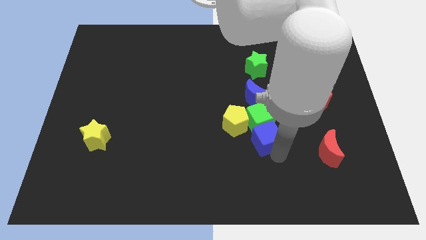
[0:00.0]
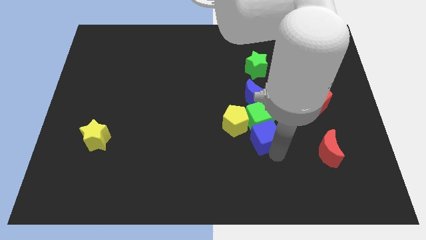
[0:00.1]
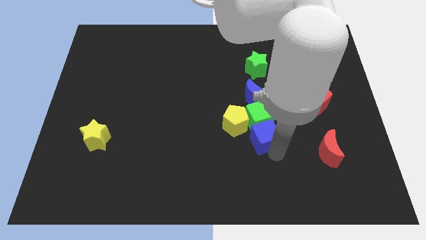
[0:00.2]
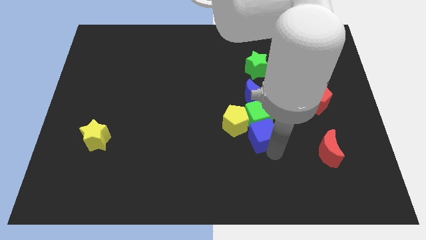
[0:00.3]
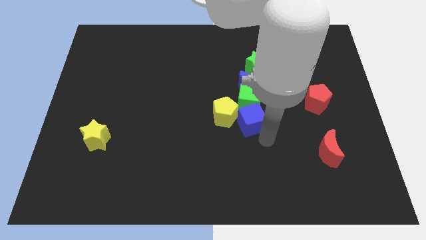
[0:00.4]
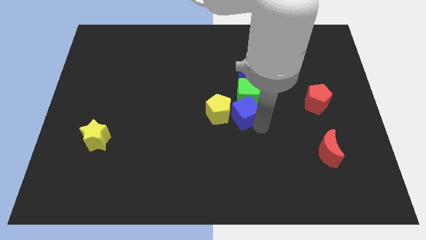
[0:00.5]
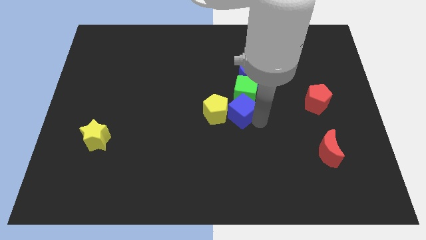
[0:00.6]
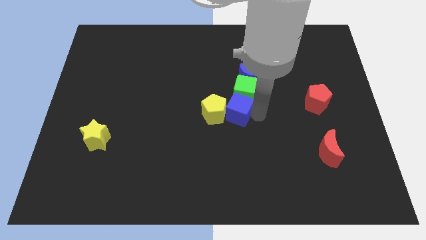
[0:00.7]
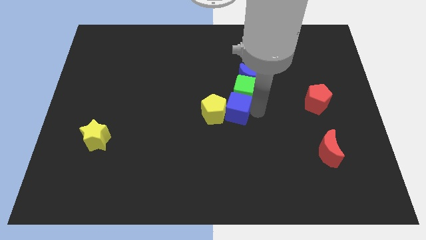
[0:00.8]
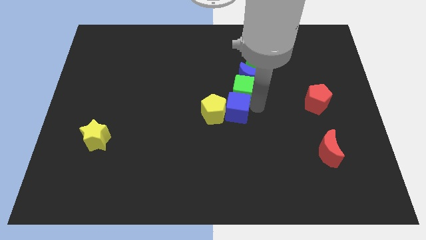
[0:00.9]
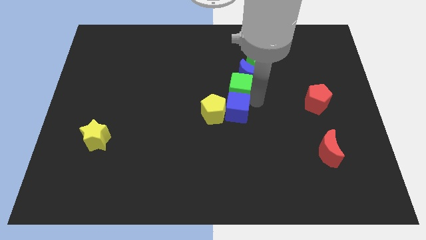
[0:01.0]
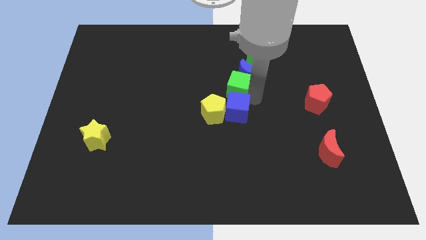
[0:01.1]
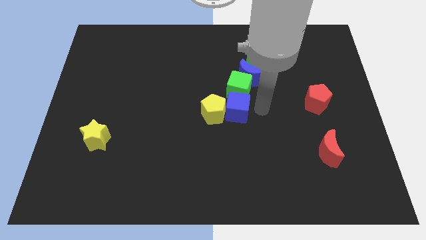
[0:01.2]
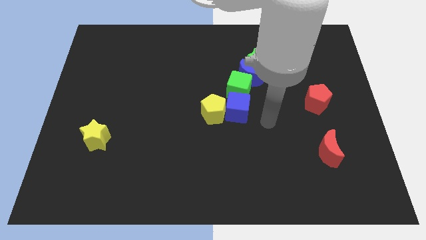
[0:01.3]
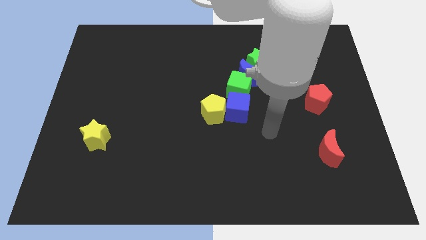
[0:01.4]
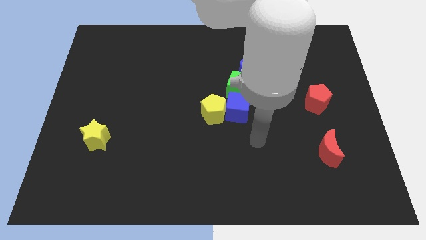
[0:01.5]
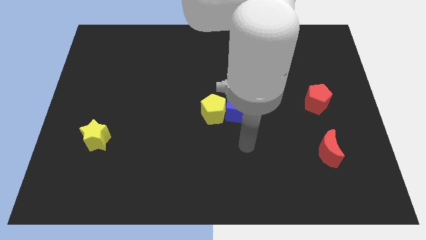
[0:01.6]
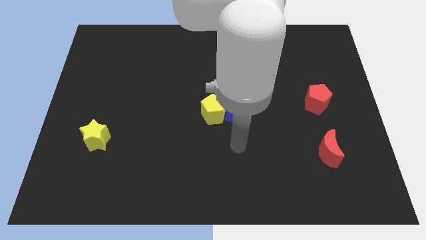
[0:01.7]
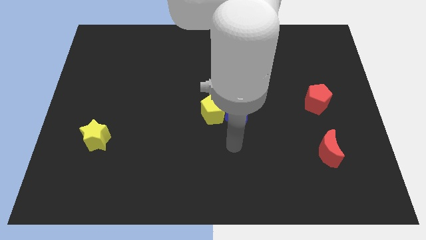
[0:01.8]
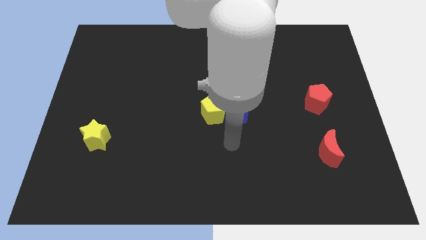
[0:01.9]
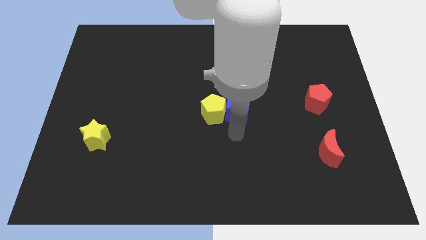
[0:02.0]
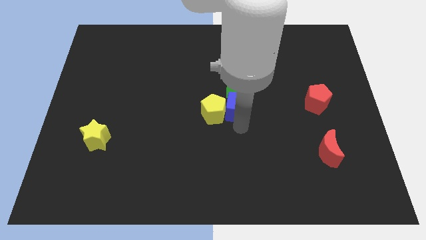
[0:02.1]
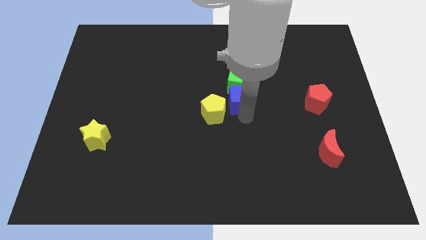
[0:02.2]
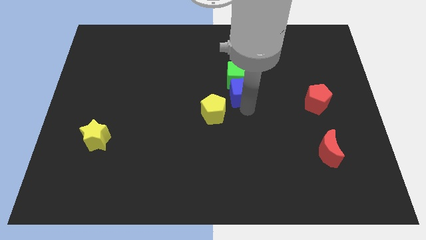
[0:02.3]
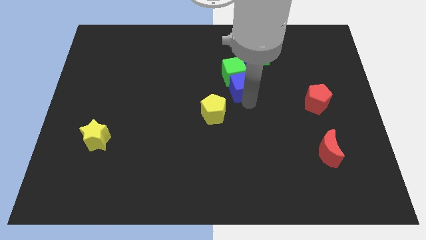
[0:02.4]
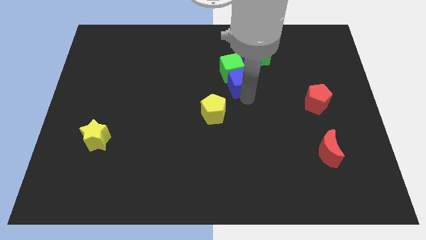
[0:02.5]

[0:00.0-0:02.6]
move the yellow pentagon with the blue cube

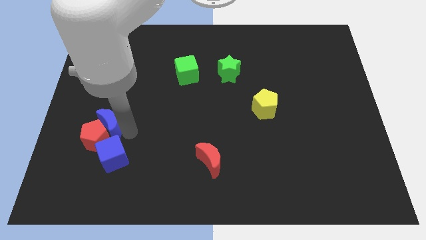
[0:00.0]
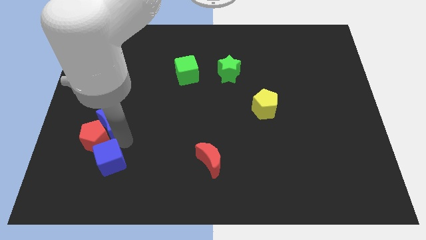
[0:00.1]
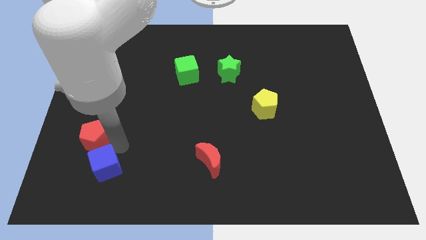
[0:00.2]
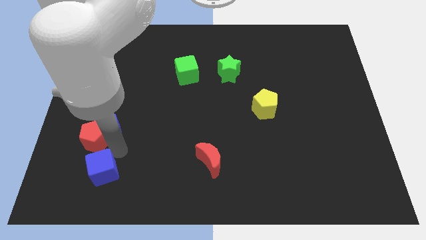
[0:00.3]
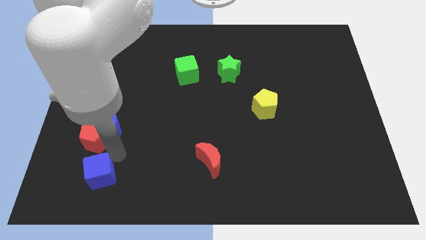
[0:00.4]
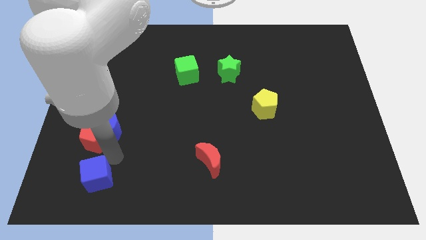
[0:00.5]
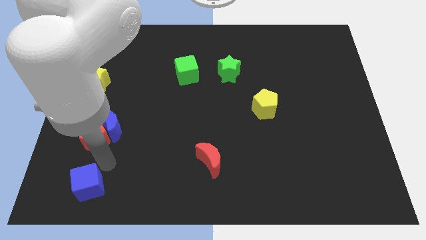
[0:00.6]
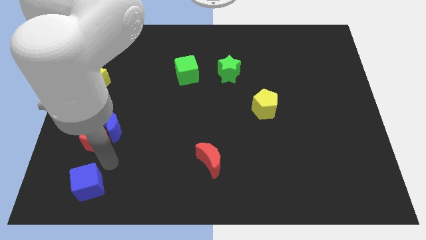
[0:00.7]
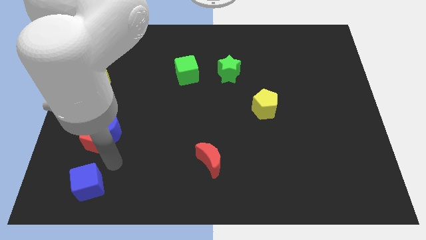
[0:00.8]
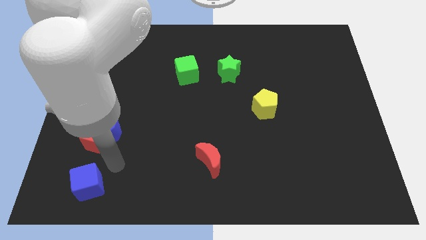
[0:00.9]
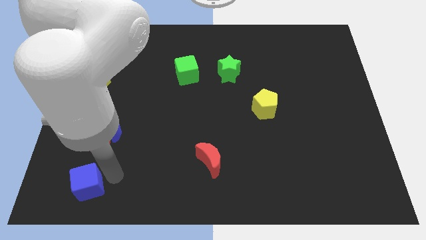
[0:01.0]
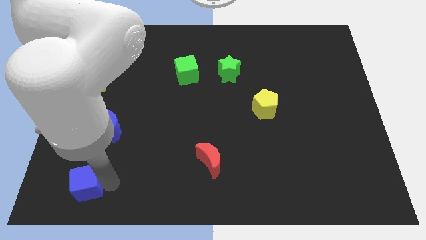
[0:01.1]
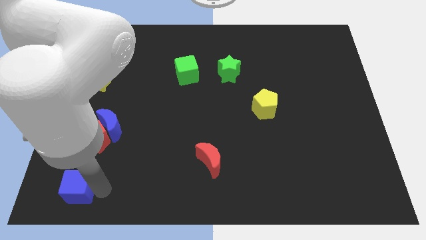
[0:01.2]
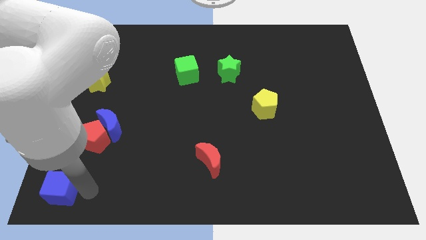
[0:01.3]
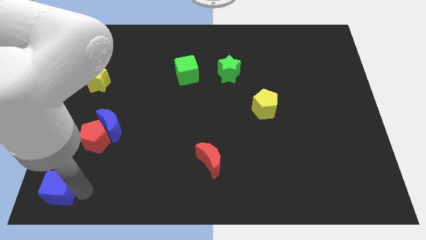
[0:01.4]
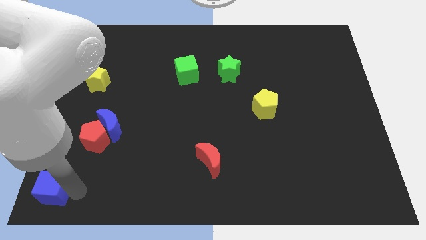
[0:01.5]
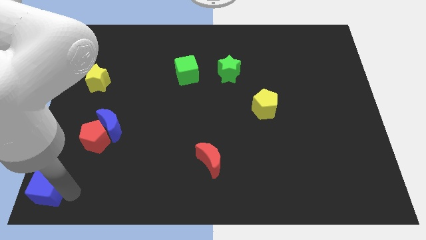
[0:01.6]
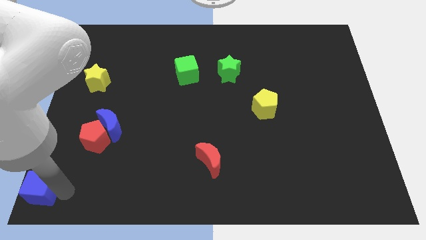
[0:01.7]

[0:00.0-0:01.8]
move the blue cube to the bottom left of the board

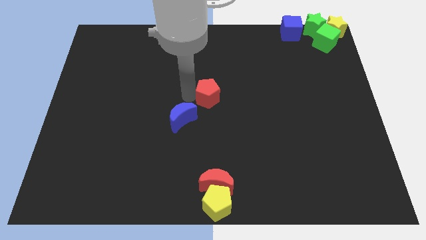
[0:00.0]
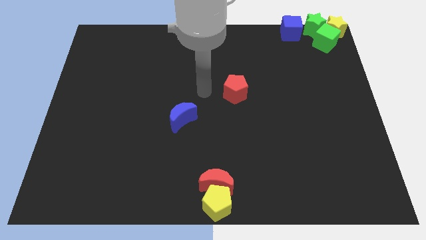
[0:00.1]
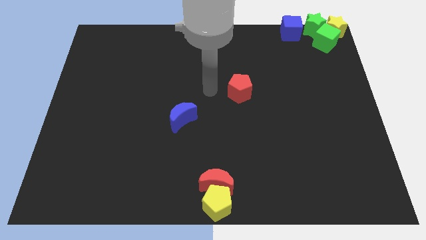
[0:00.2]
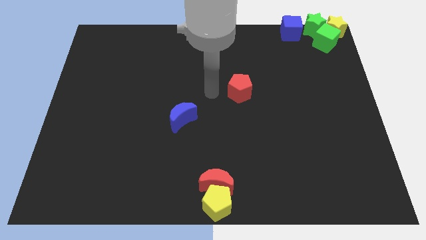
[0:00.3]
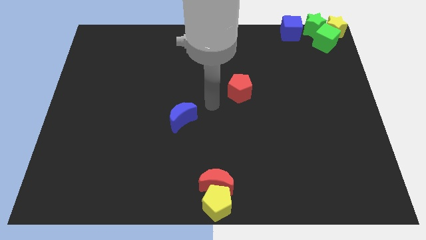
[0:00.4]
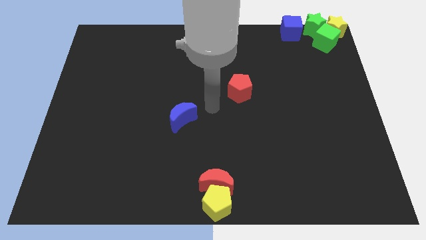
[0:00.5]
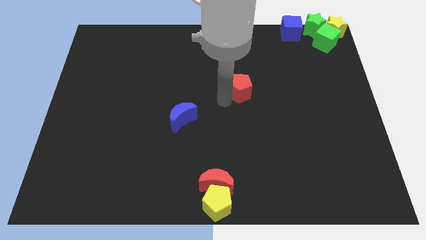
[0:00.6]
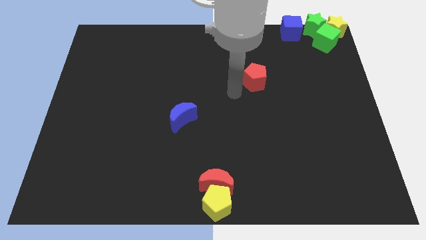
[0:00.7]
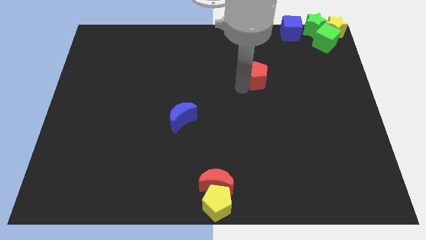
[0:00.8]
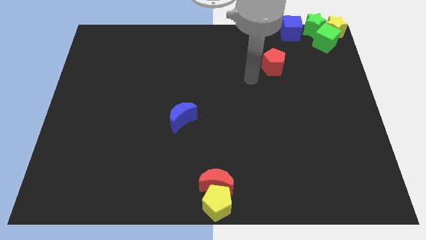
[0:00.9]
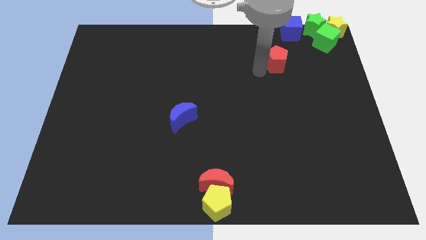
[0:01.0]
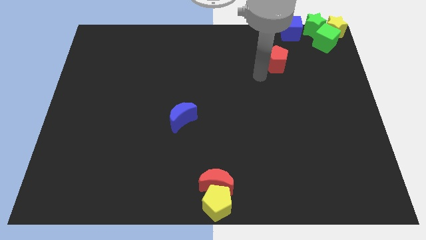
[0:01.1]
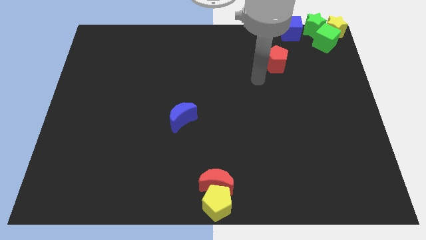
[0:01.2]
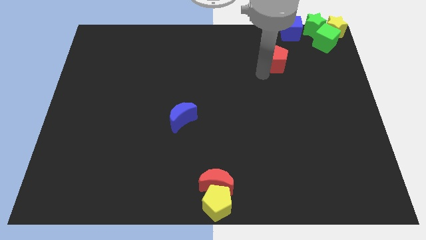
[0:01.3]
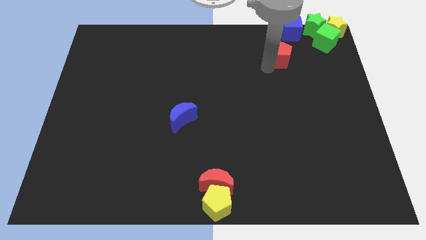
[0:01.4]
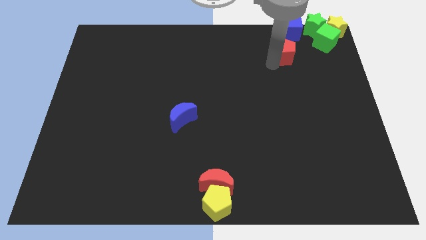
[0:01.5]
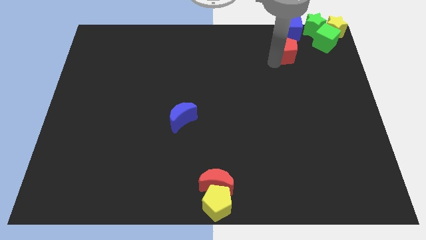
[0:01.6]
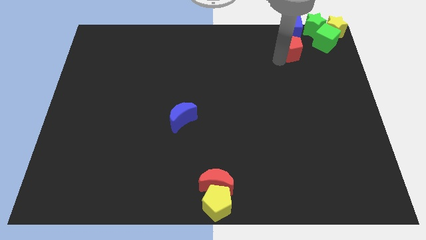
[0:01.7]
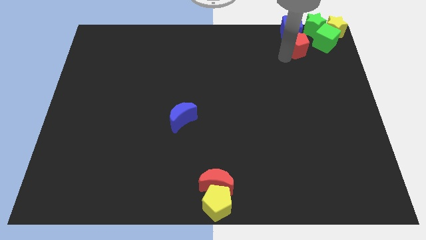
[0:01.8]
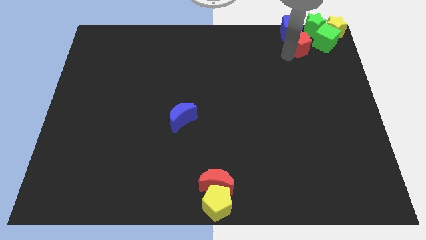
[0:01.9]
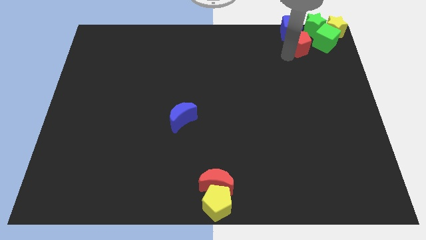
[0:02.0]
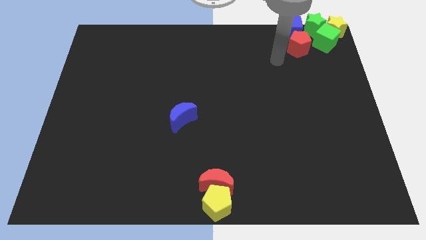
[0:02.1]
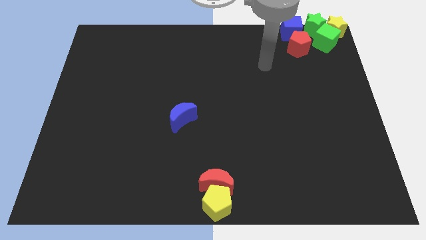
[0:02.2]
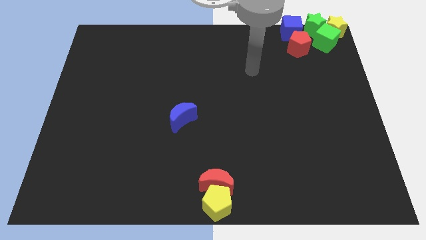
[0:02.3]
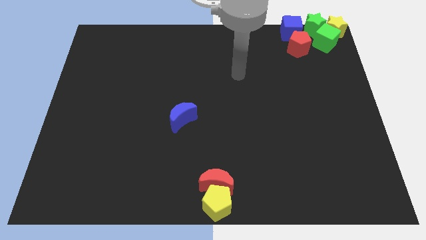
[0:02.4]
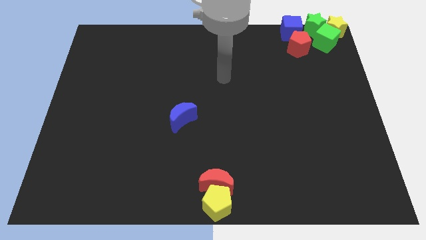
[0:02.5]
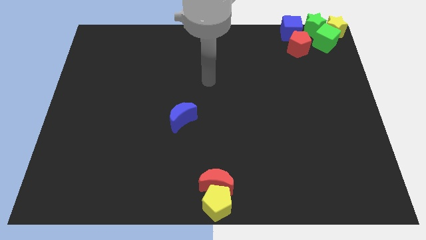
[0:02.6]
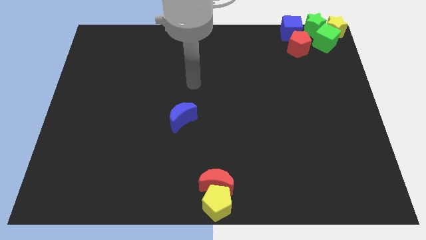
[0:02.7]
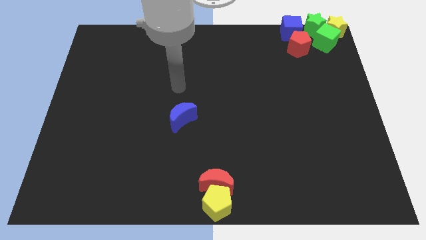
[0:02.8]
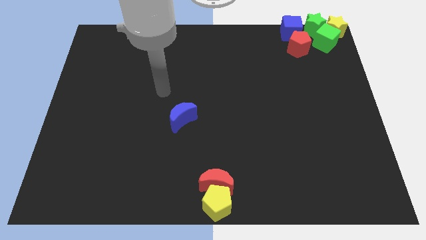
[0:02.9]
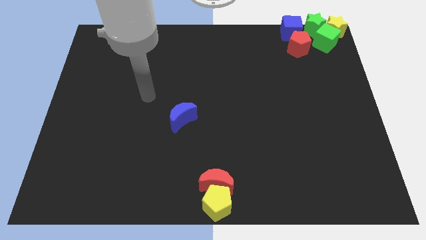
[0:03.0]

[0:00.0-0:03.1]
move the red pentagon near to the group of objects

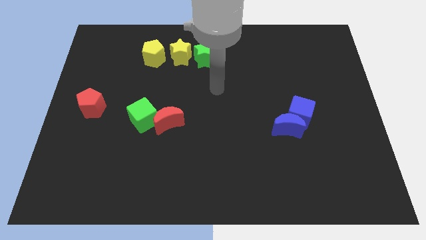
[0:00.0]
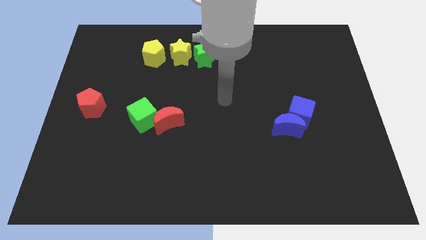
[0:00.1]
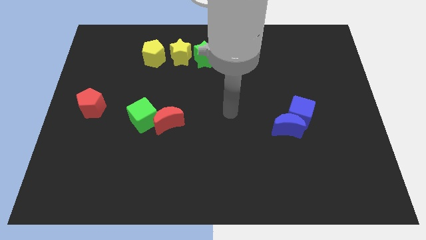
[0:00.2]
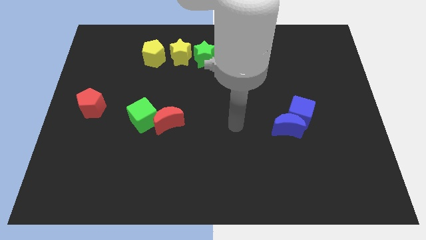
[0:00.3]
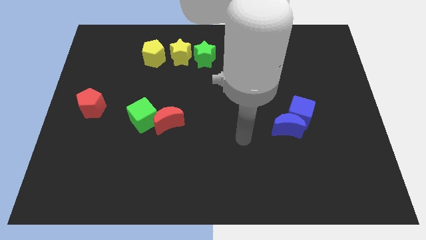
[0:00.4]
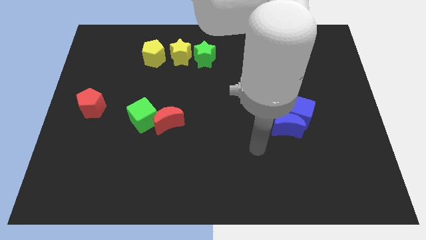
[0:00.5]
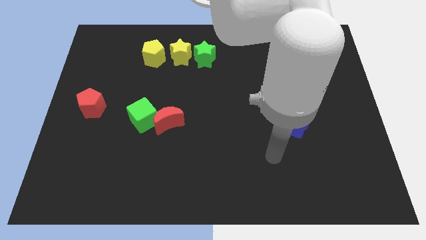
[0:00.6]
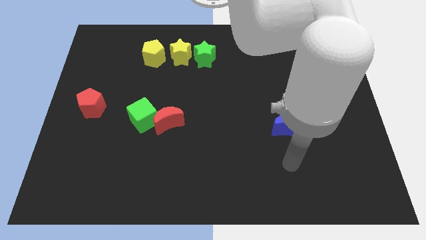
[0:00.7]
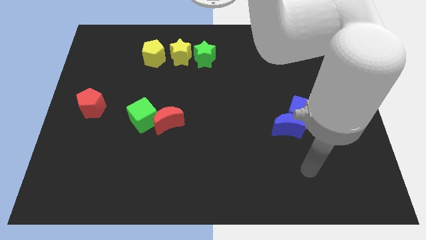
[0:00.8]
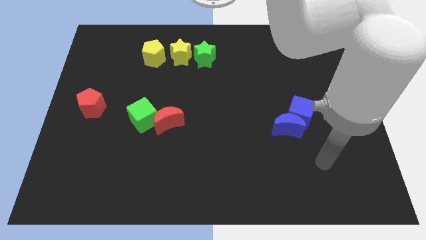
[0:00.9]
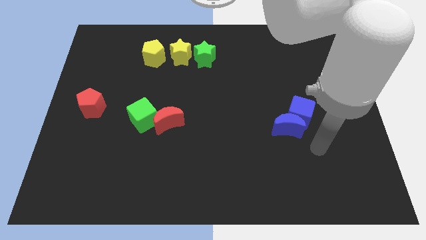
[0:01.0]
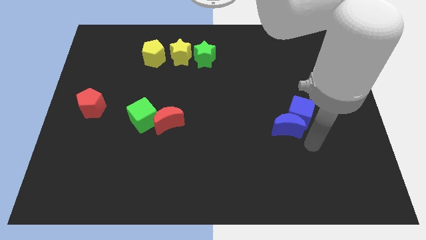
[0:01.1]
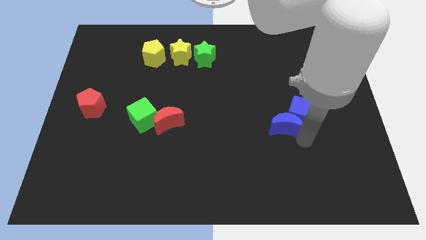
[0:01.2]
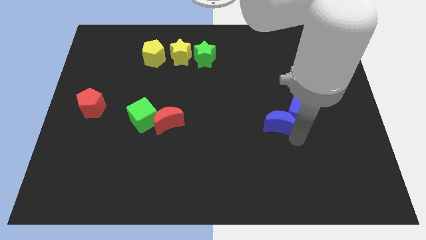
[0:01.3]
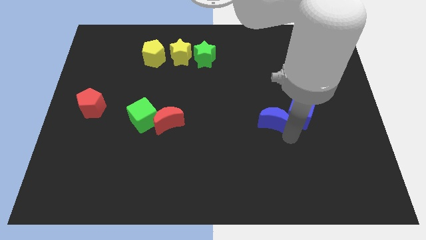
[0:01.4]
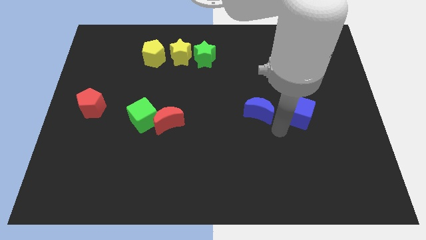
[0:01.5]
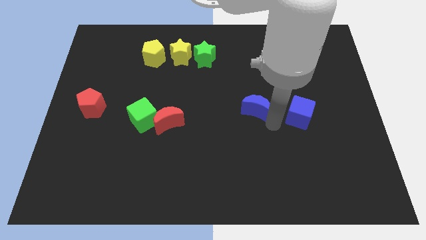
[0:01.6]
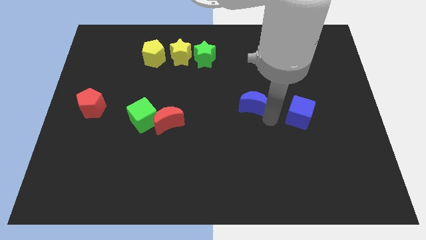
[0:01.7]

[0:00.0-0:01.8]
separate the blue crescent from the blue cube
